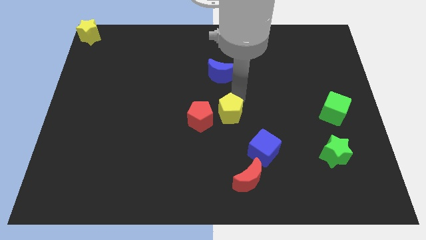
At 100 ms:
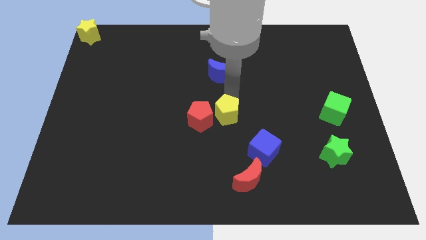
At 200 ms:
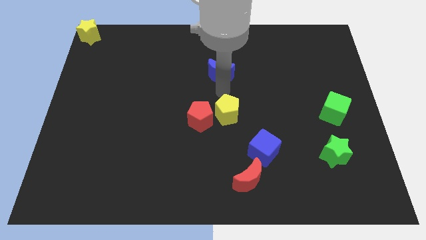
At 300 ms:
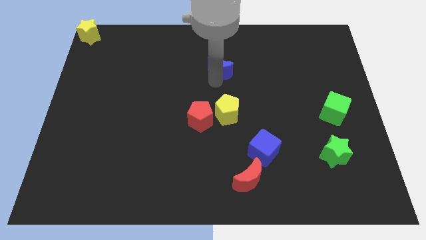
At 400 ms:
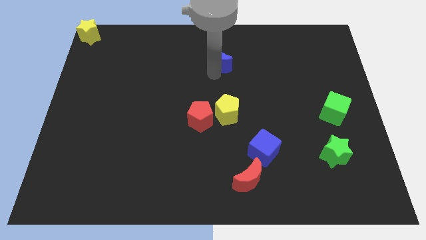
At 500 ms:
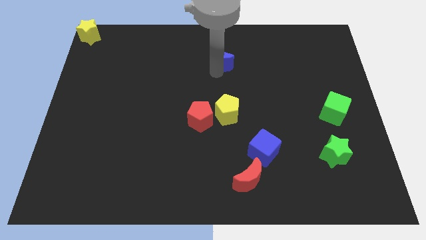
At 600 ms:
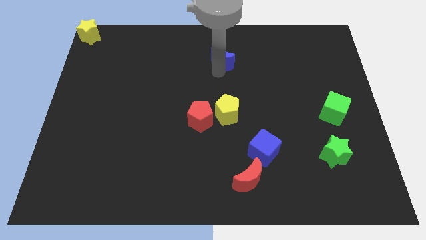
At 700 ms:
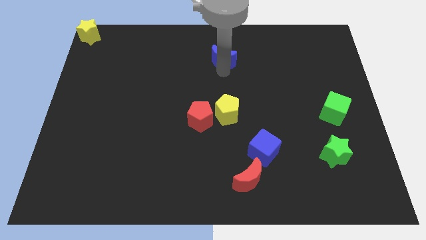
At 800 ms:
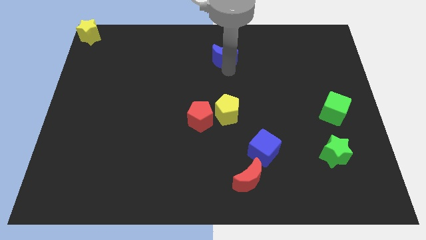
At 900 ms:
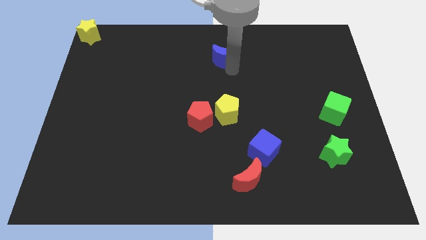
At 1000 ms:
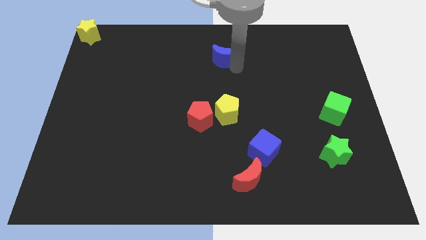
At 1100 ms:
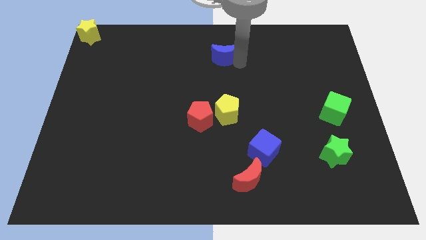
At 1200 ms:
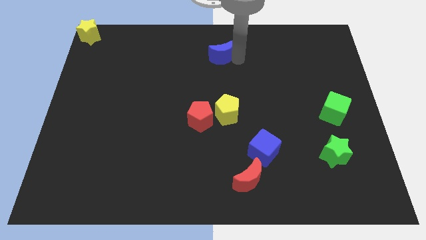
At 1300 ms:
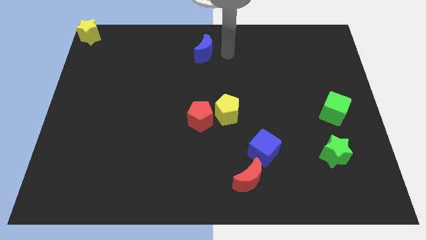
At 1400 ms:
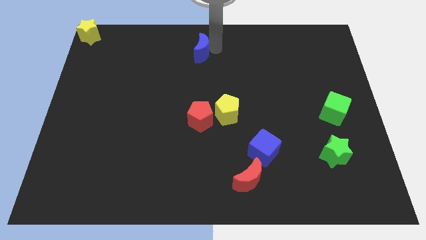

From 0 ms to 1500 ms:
place the blue moon above the red pentagon

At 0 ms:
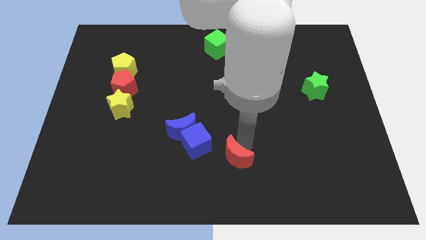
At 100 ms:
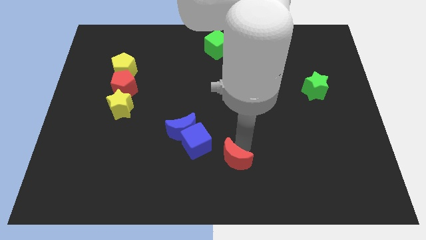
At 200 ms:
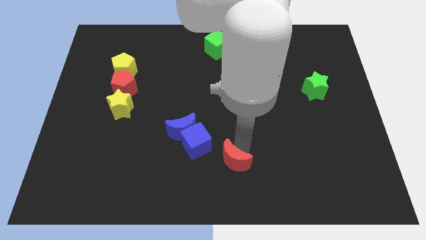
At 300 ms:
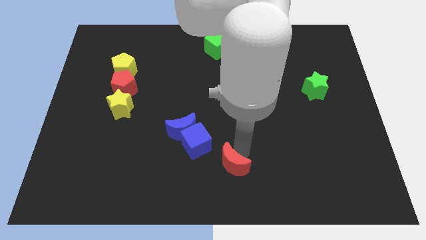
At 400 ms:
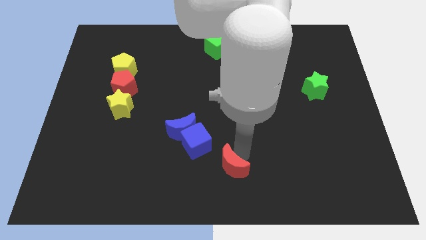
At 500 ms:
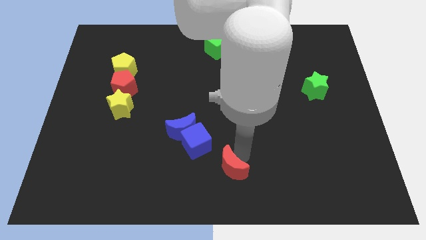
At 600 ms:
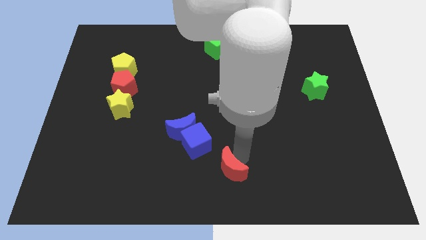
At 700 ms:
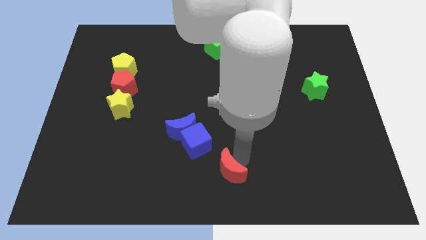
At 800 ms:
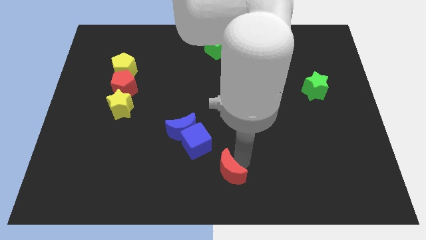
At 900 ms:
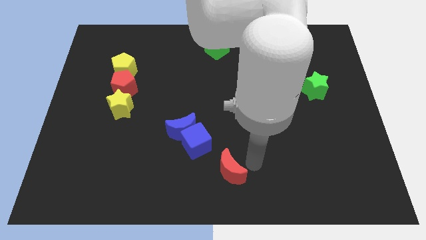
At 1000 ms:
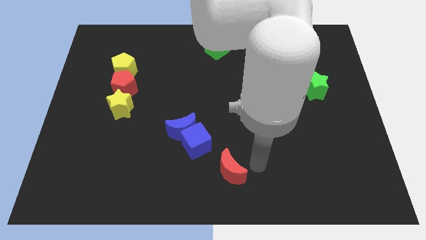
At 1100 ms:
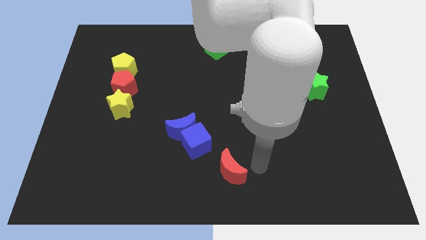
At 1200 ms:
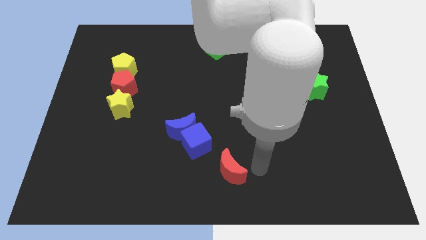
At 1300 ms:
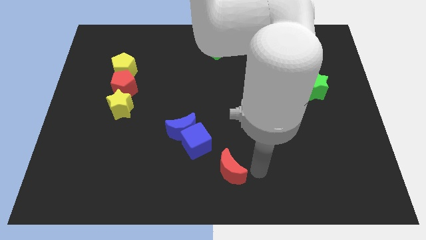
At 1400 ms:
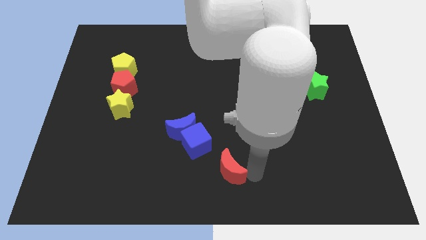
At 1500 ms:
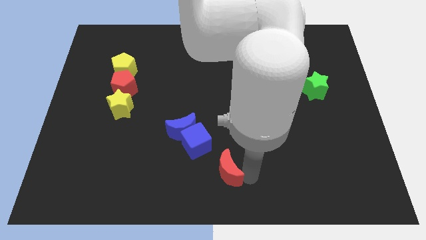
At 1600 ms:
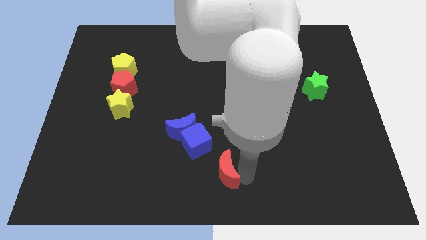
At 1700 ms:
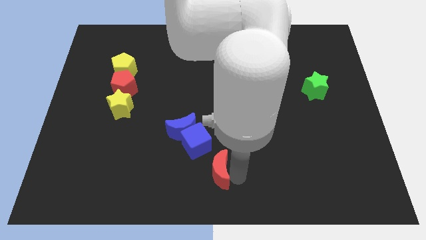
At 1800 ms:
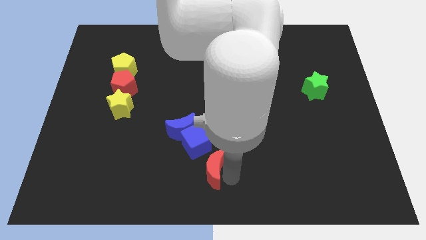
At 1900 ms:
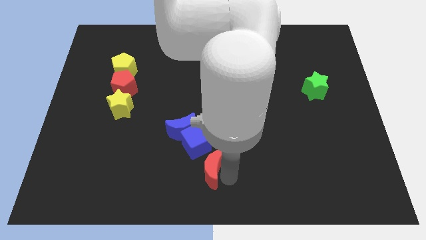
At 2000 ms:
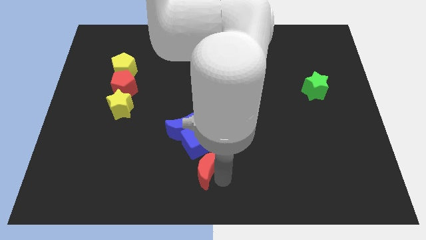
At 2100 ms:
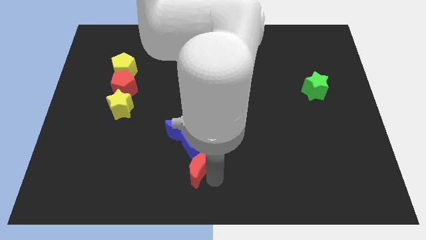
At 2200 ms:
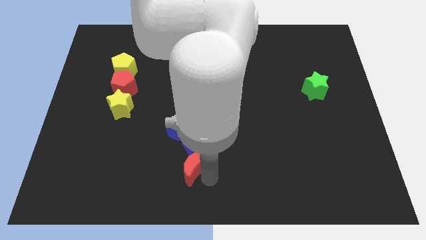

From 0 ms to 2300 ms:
put the red moon below the blue cube

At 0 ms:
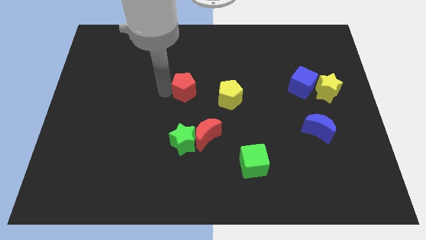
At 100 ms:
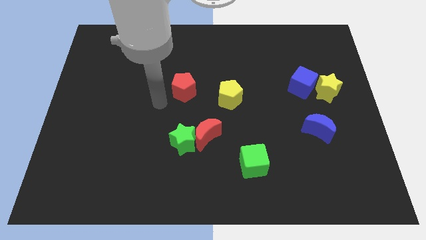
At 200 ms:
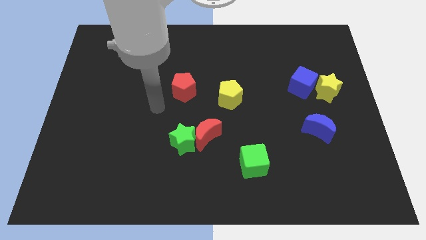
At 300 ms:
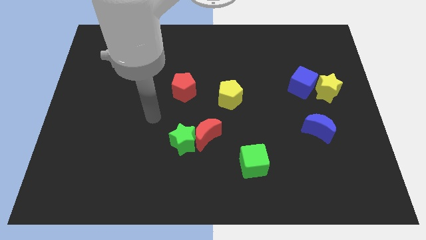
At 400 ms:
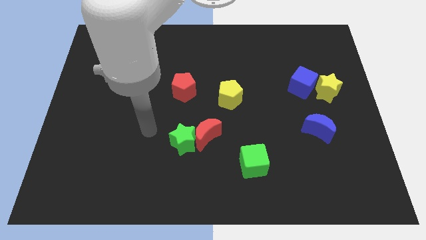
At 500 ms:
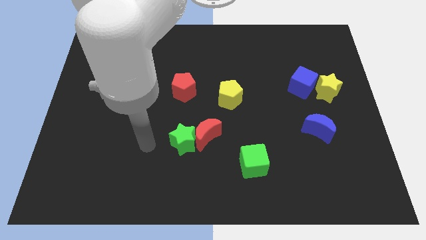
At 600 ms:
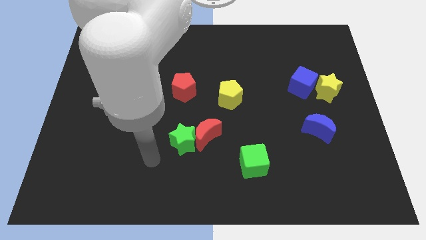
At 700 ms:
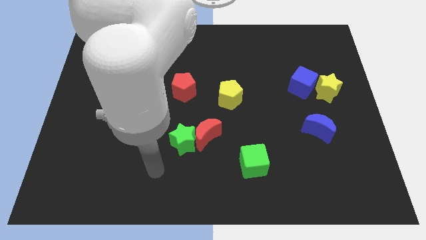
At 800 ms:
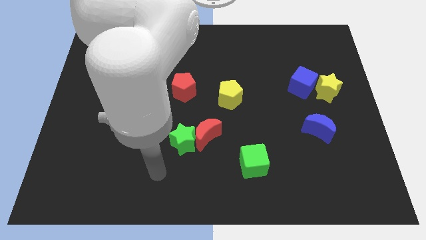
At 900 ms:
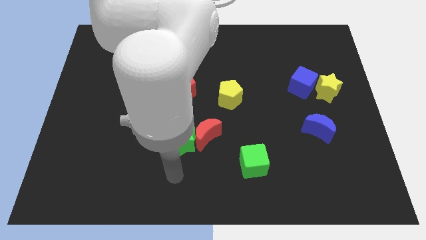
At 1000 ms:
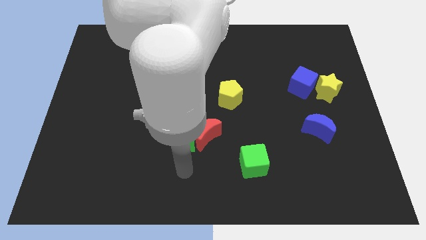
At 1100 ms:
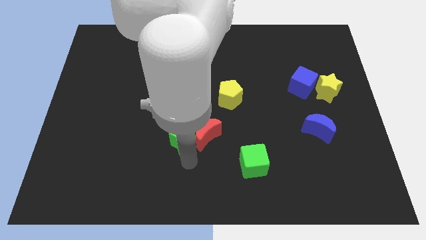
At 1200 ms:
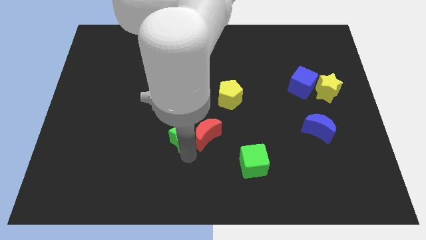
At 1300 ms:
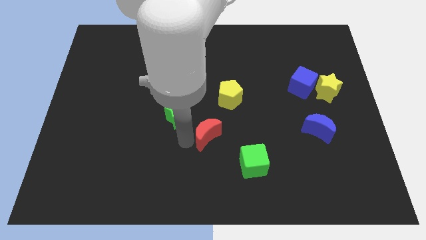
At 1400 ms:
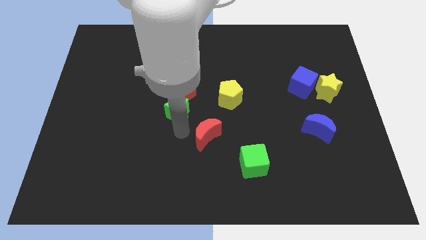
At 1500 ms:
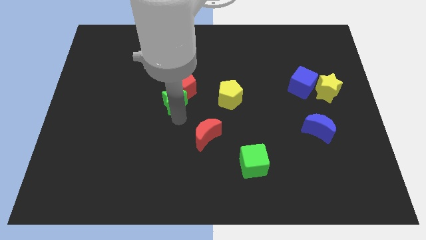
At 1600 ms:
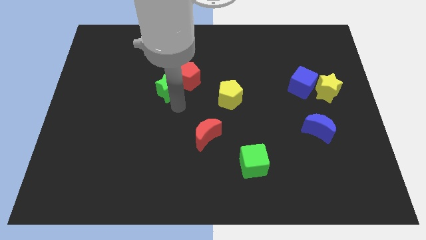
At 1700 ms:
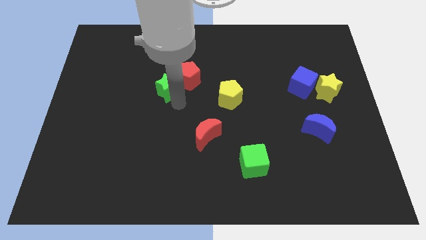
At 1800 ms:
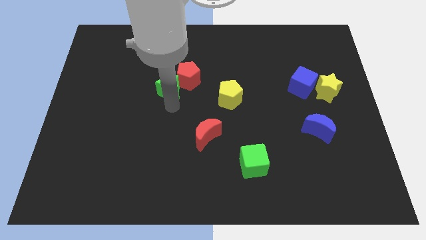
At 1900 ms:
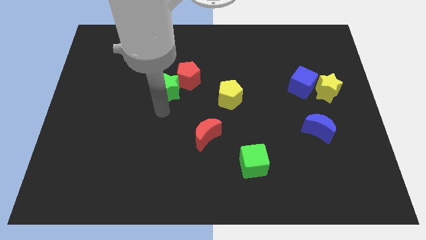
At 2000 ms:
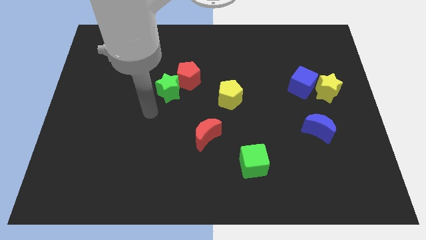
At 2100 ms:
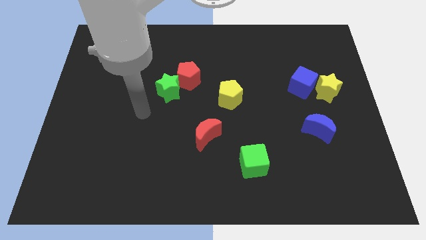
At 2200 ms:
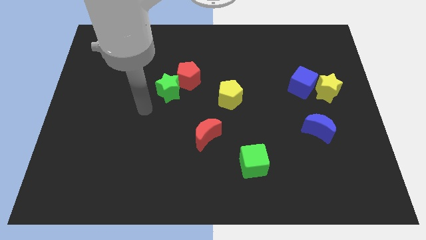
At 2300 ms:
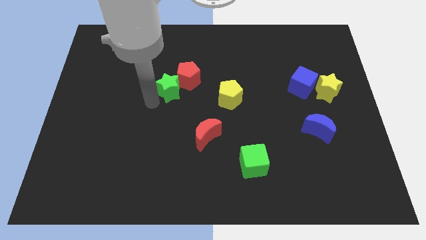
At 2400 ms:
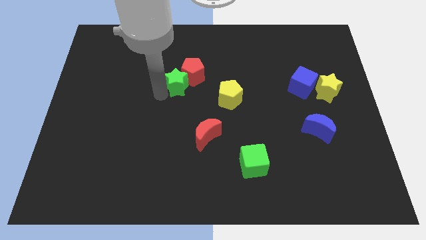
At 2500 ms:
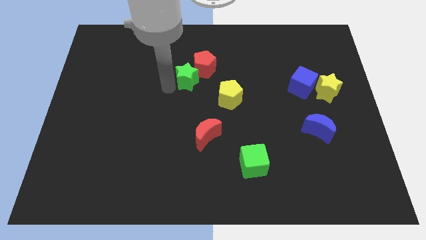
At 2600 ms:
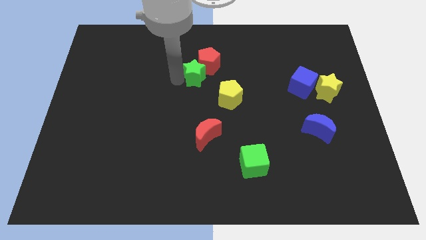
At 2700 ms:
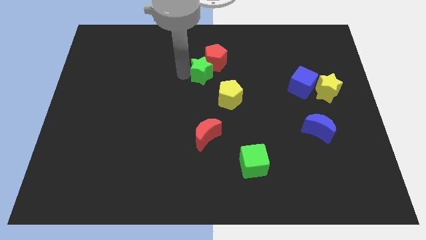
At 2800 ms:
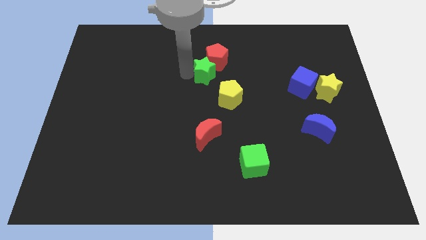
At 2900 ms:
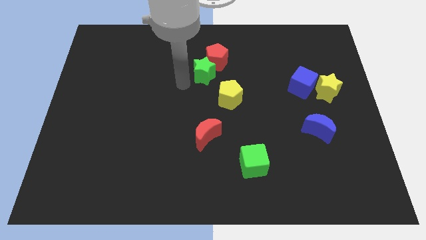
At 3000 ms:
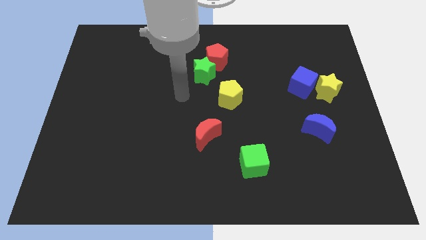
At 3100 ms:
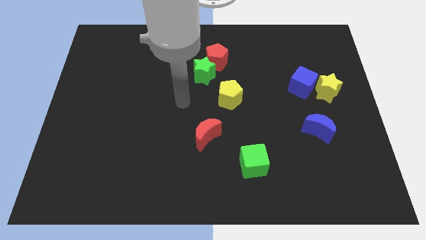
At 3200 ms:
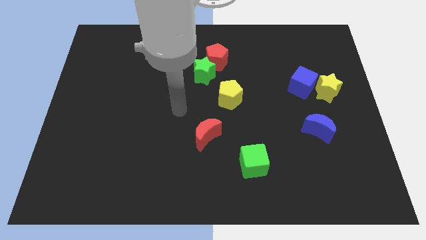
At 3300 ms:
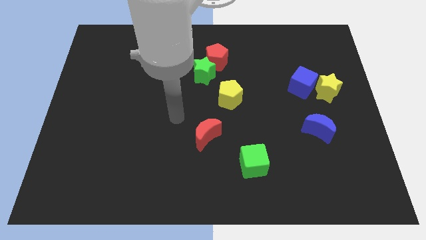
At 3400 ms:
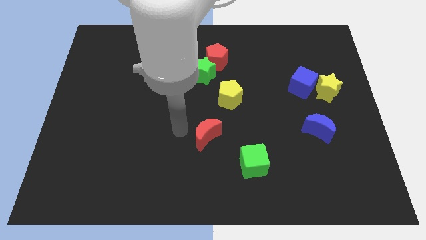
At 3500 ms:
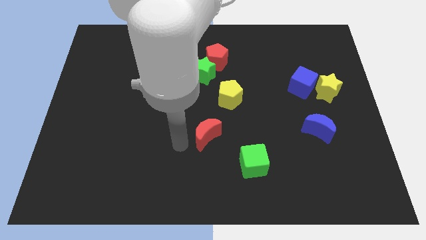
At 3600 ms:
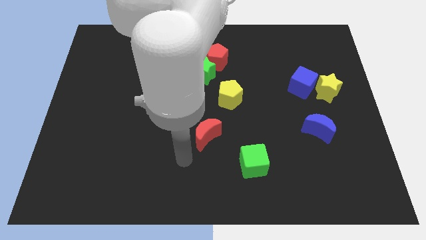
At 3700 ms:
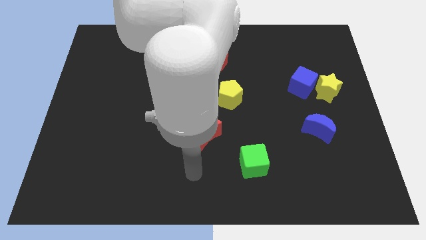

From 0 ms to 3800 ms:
push the green star and red pentagon to the top center of the board

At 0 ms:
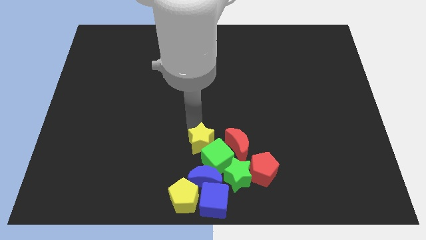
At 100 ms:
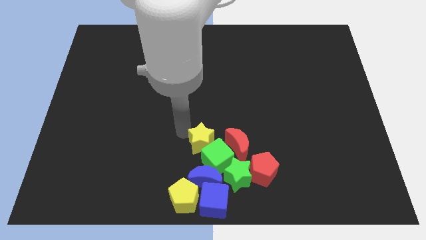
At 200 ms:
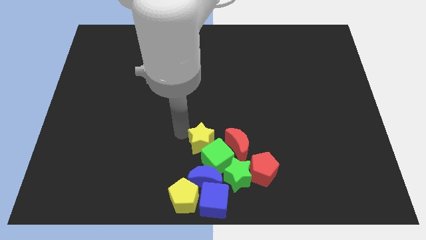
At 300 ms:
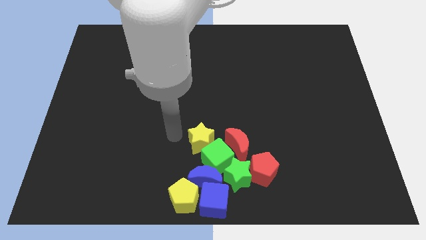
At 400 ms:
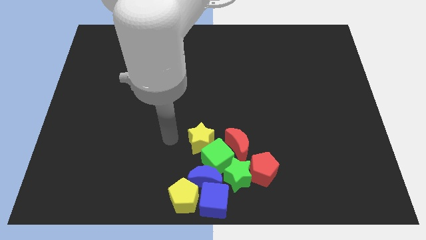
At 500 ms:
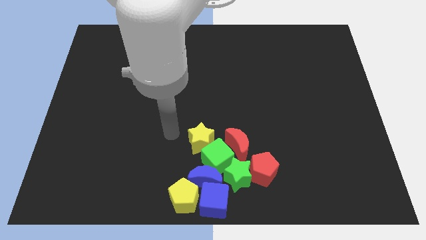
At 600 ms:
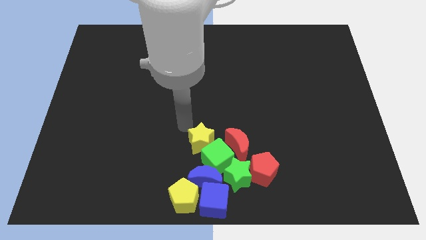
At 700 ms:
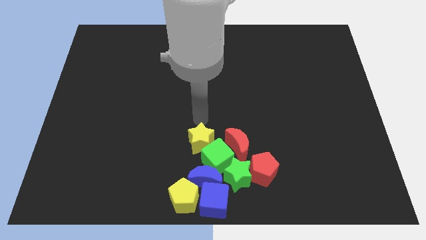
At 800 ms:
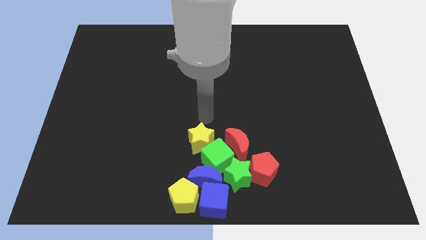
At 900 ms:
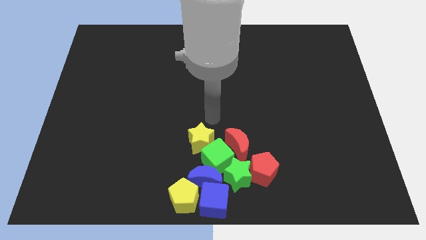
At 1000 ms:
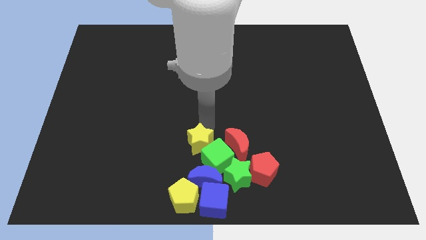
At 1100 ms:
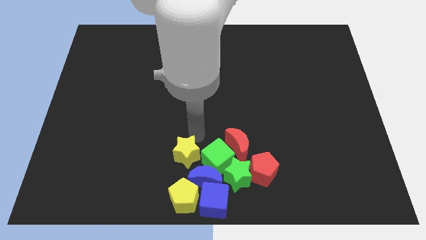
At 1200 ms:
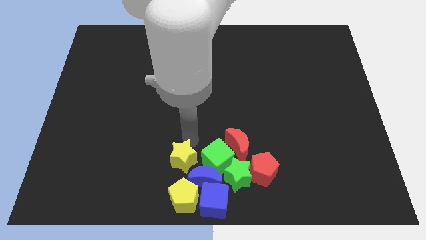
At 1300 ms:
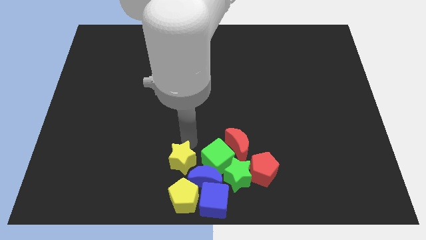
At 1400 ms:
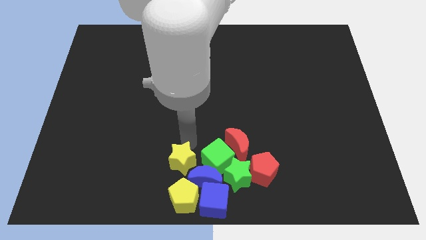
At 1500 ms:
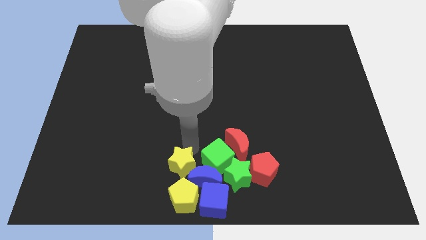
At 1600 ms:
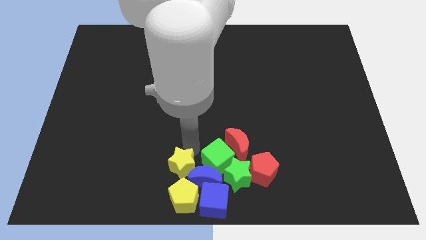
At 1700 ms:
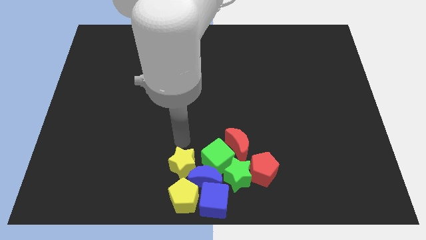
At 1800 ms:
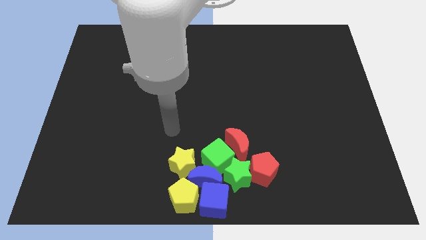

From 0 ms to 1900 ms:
drag the yellow star to the top of the yellow pentagon
